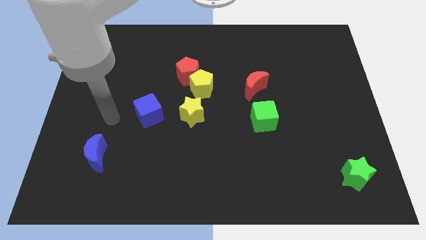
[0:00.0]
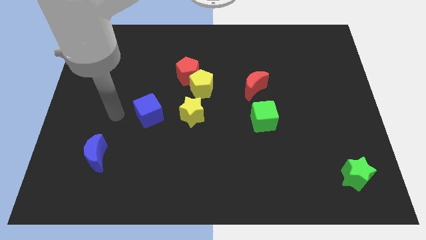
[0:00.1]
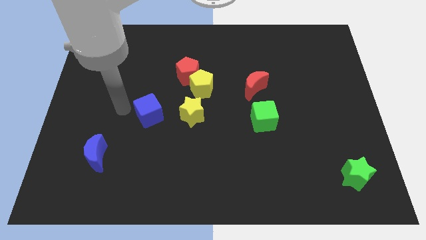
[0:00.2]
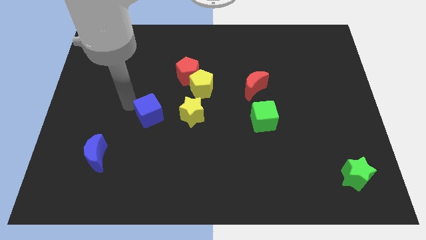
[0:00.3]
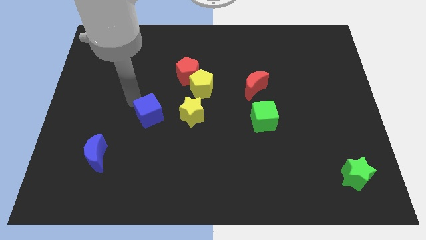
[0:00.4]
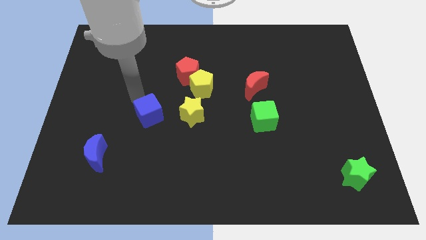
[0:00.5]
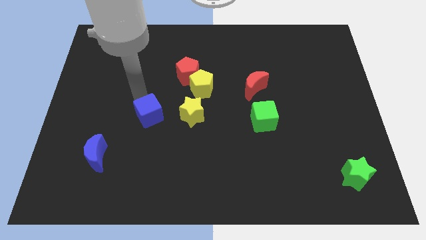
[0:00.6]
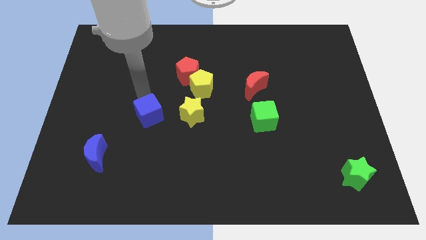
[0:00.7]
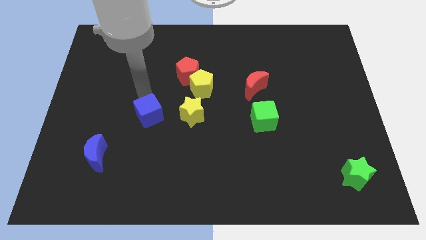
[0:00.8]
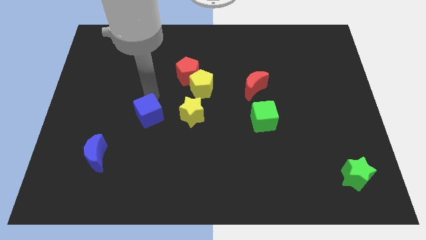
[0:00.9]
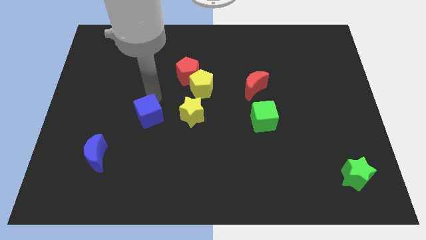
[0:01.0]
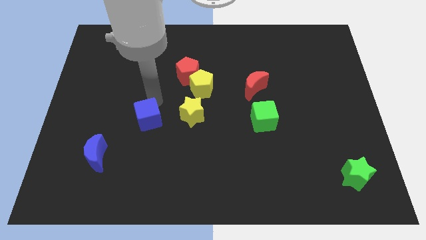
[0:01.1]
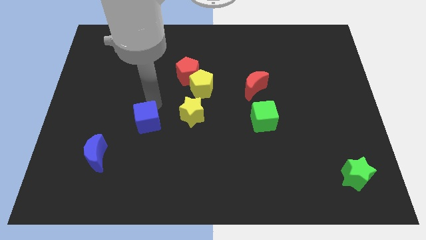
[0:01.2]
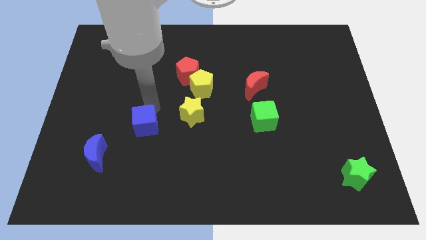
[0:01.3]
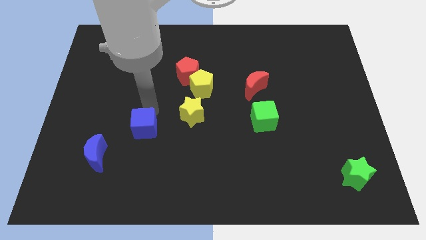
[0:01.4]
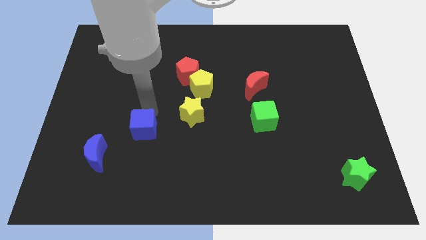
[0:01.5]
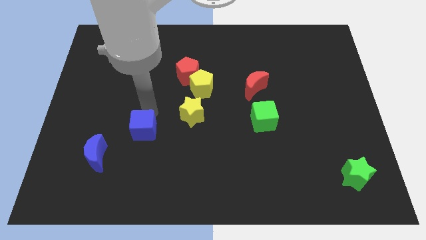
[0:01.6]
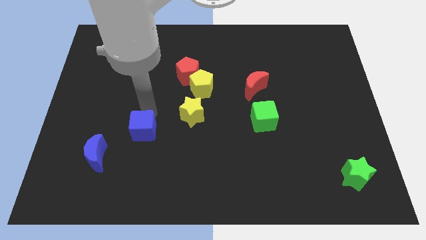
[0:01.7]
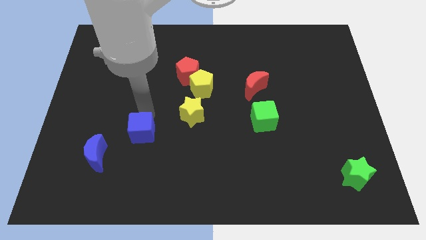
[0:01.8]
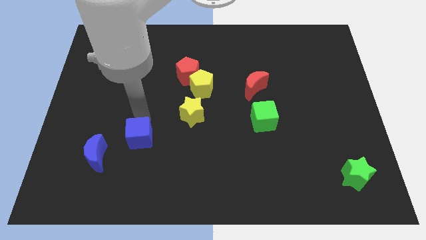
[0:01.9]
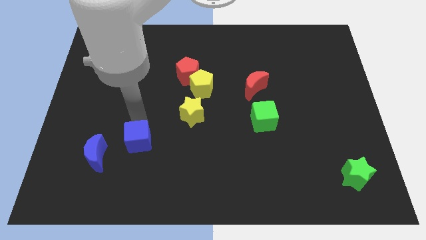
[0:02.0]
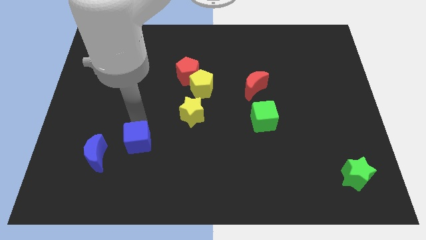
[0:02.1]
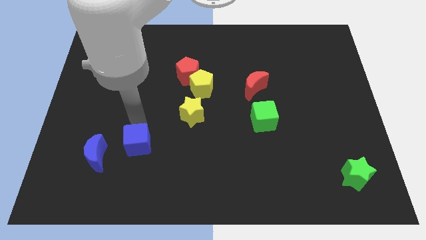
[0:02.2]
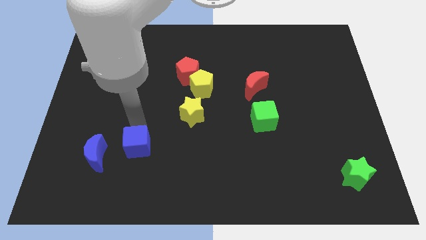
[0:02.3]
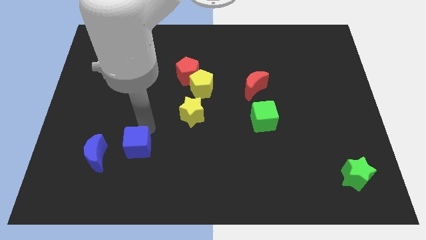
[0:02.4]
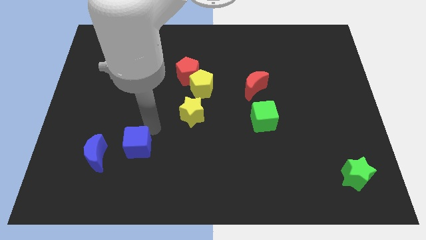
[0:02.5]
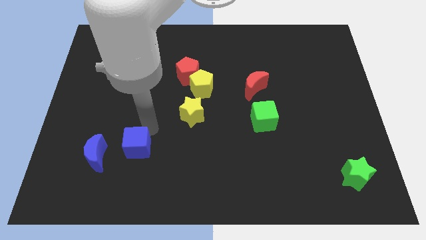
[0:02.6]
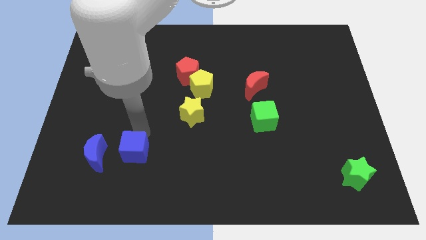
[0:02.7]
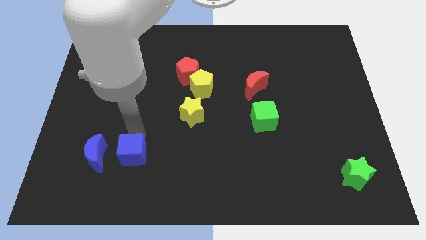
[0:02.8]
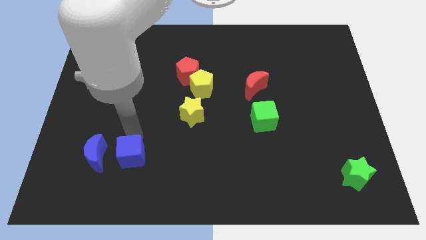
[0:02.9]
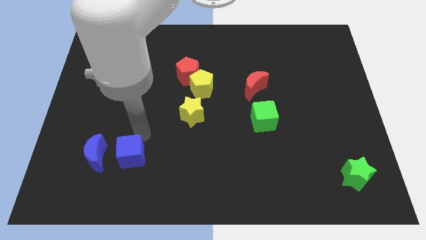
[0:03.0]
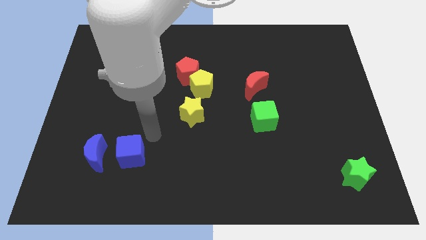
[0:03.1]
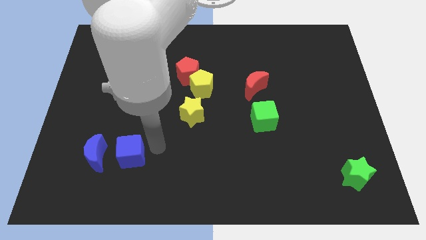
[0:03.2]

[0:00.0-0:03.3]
push the blue cube right to the blue crescent

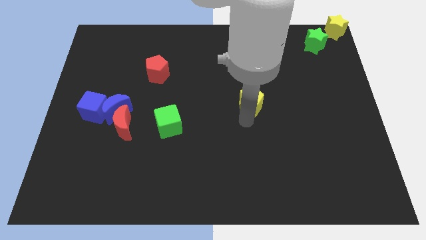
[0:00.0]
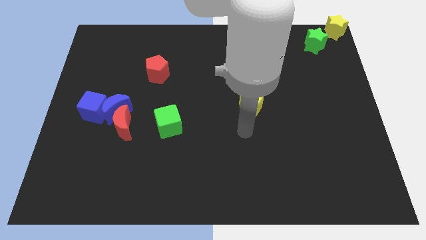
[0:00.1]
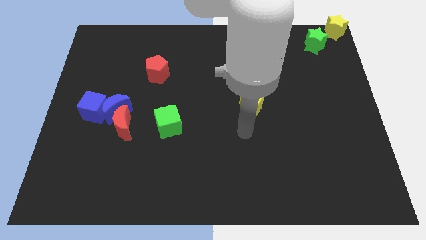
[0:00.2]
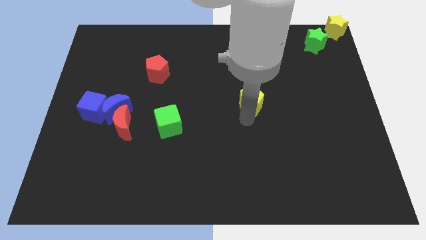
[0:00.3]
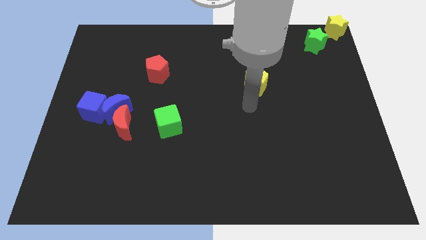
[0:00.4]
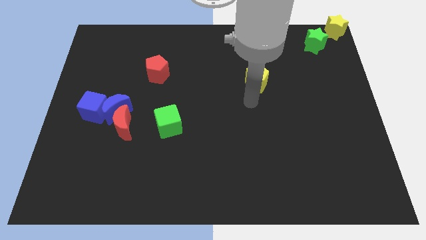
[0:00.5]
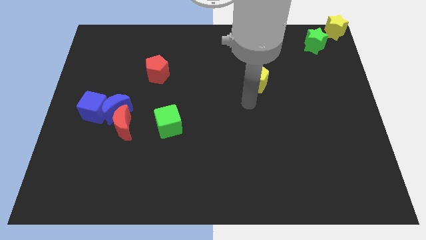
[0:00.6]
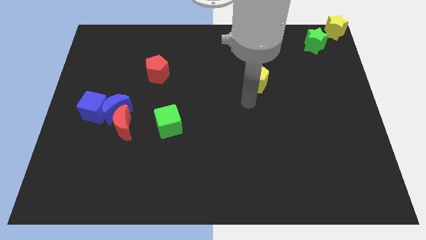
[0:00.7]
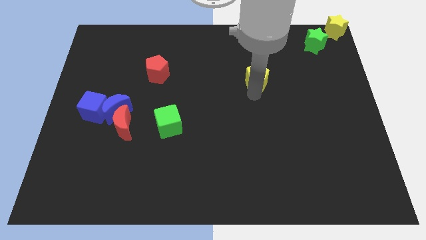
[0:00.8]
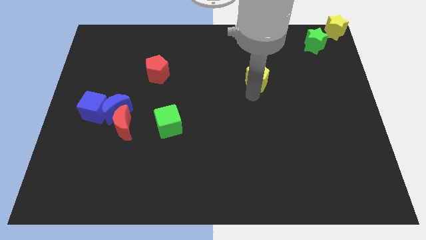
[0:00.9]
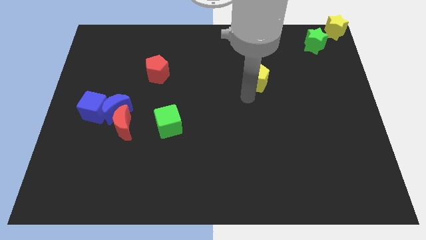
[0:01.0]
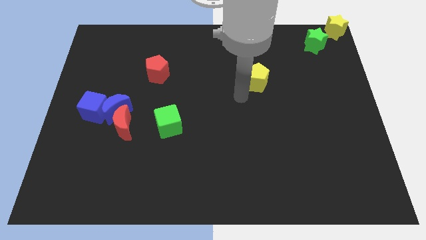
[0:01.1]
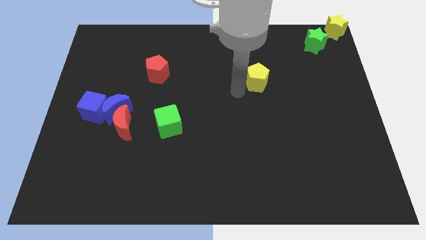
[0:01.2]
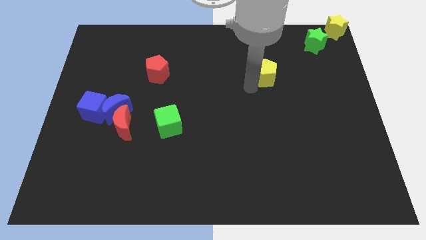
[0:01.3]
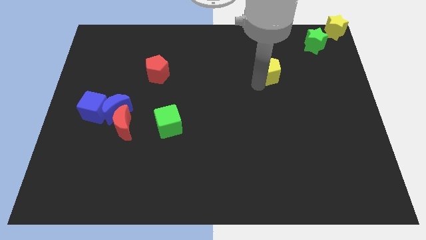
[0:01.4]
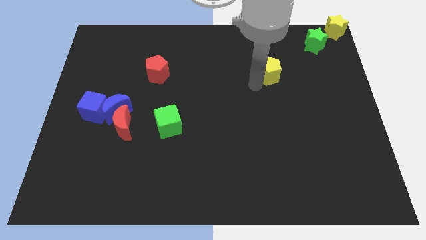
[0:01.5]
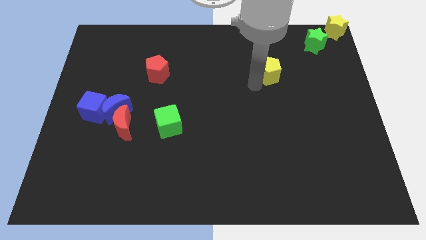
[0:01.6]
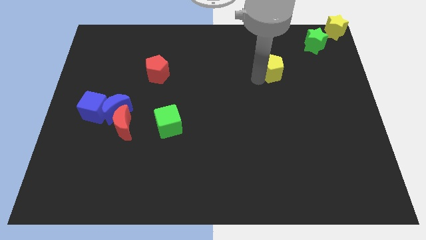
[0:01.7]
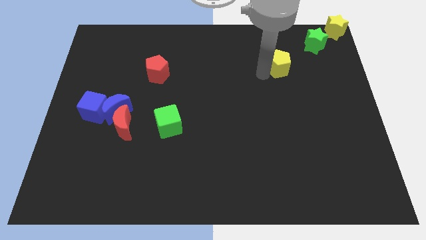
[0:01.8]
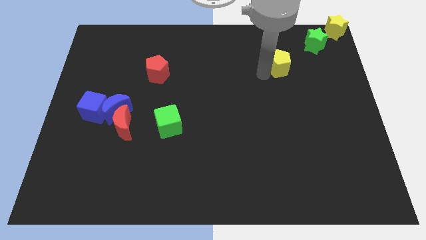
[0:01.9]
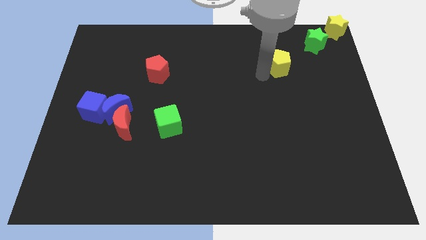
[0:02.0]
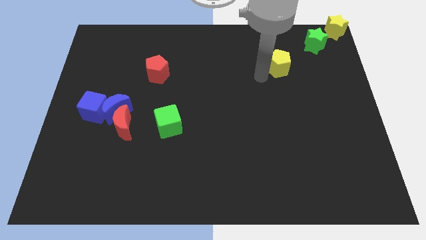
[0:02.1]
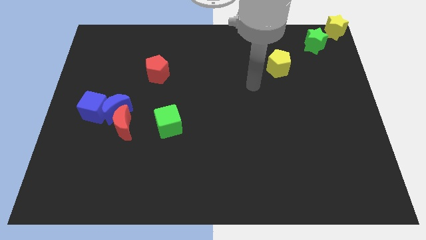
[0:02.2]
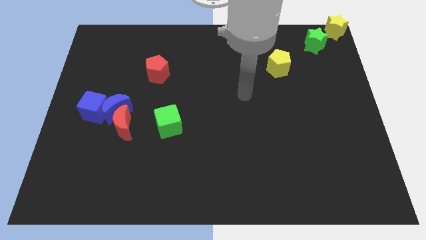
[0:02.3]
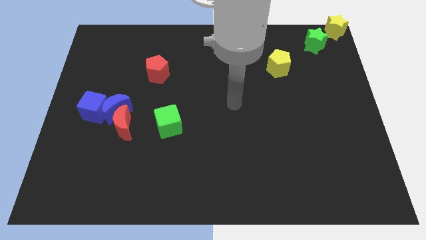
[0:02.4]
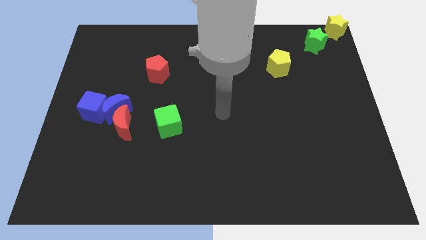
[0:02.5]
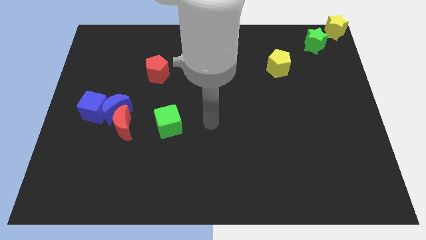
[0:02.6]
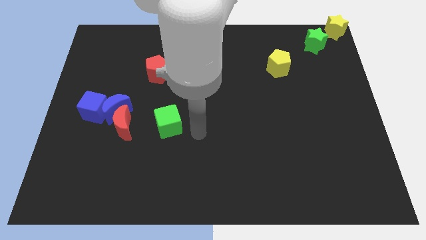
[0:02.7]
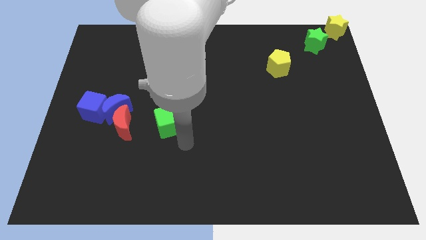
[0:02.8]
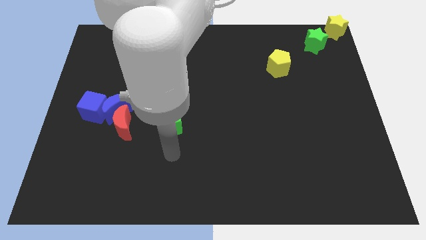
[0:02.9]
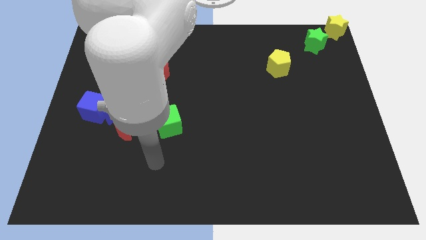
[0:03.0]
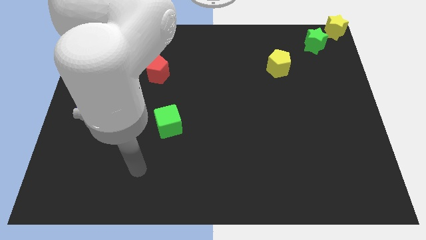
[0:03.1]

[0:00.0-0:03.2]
move your arm away from the yellow pentagon

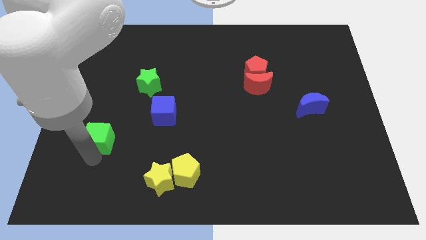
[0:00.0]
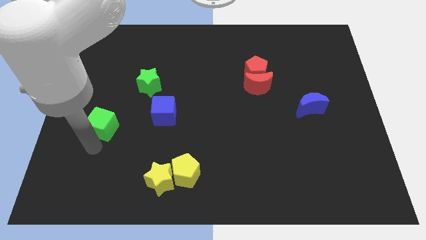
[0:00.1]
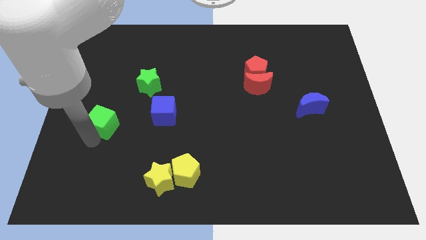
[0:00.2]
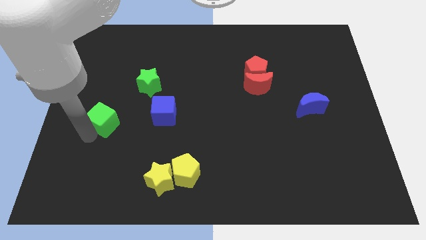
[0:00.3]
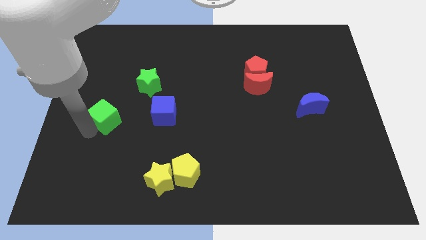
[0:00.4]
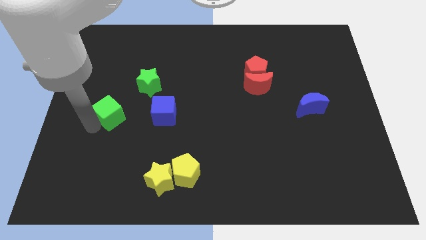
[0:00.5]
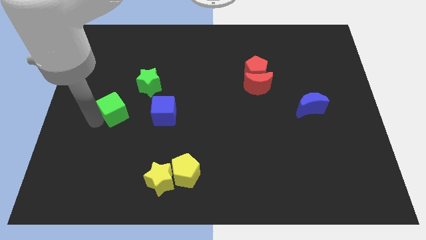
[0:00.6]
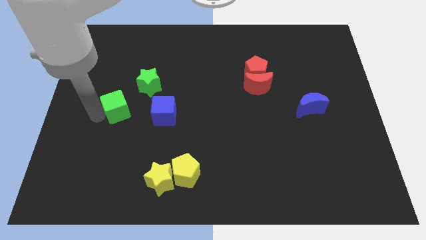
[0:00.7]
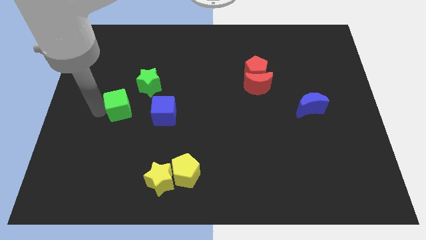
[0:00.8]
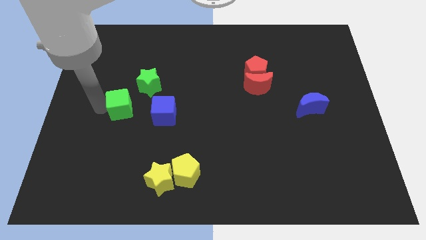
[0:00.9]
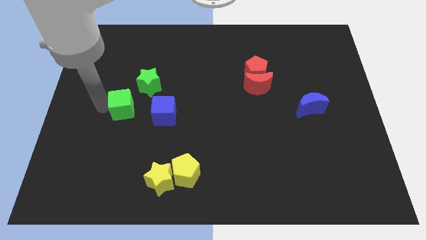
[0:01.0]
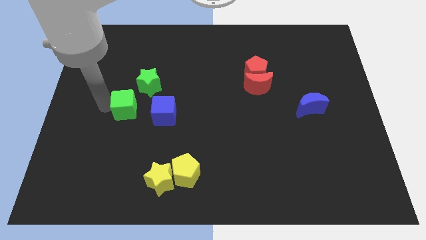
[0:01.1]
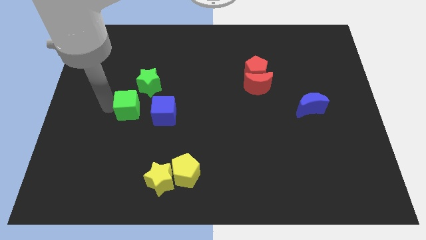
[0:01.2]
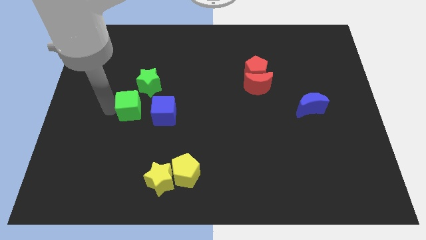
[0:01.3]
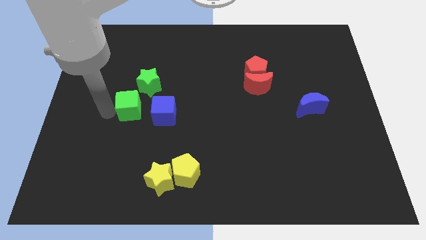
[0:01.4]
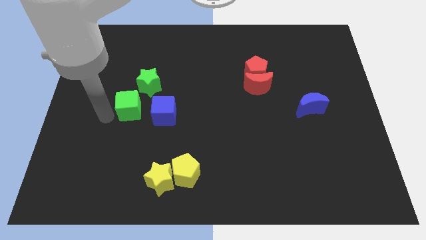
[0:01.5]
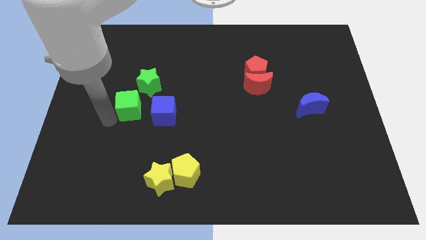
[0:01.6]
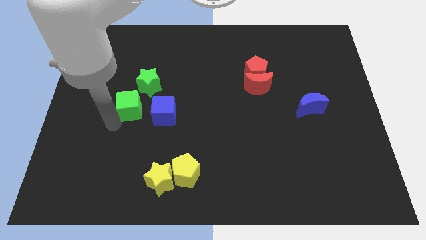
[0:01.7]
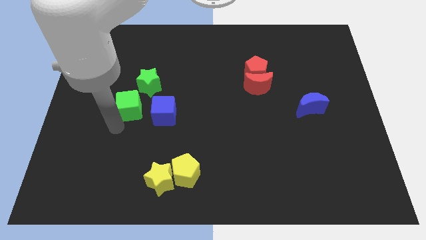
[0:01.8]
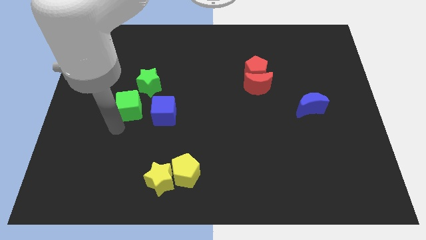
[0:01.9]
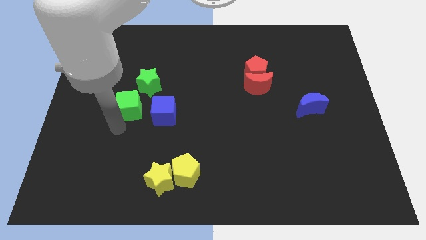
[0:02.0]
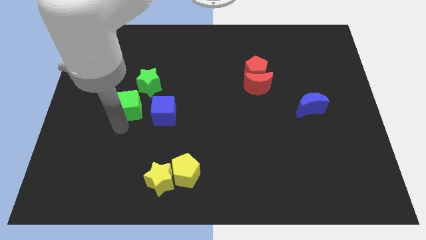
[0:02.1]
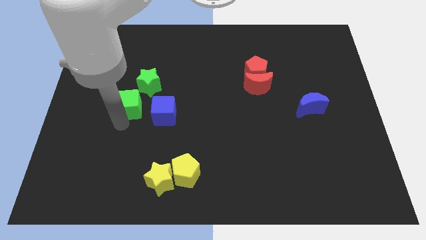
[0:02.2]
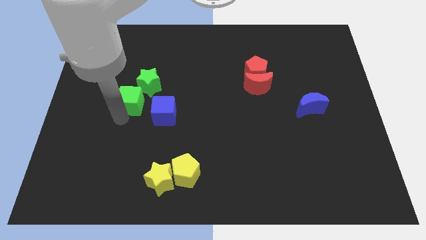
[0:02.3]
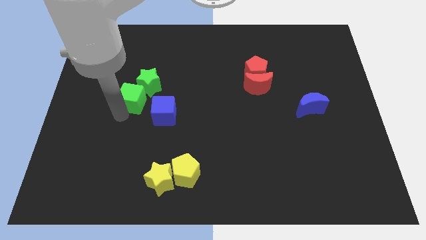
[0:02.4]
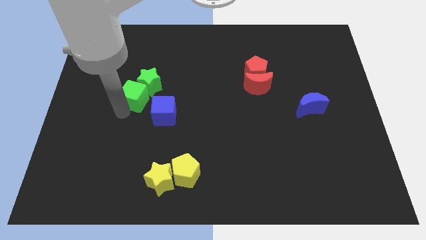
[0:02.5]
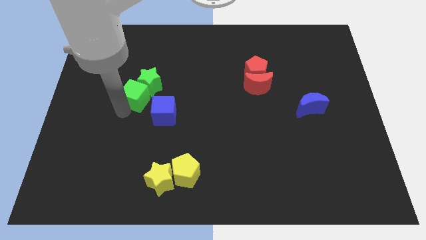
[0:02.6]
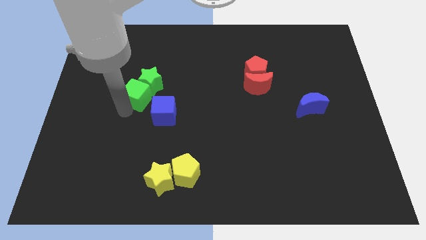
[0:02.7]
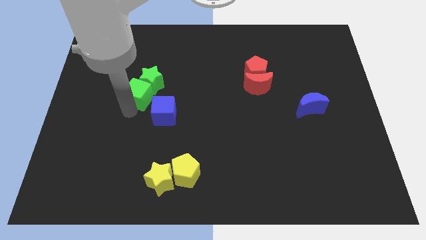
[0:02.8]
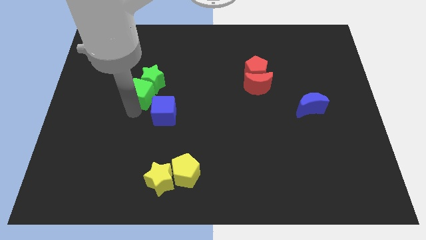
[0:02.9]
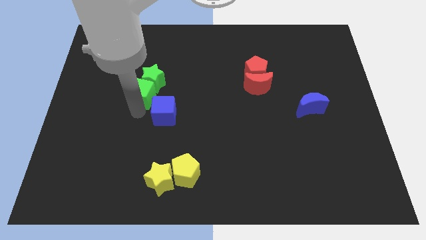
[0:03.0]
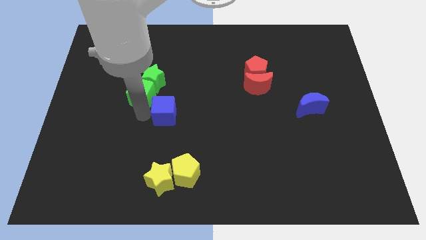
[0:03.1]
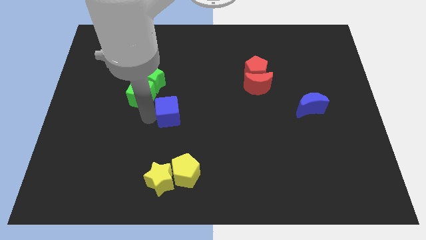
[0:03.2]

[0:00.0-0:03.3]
push the green cube into the green star
